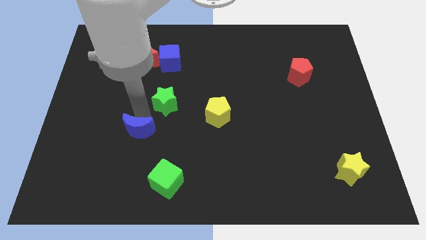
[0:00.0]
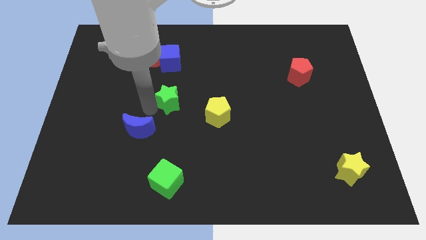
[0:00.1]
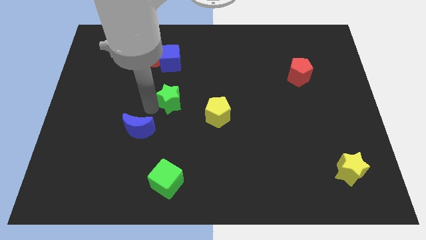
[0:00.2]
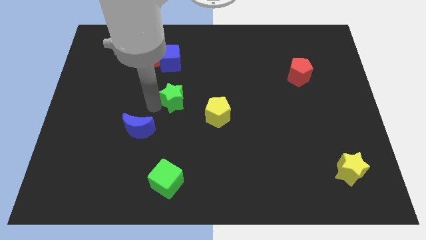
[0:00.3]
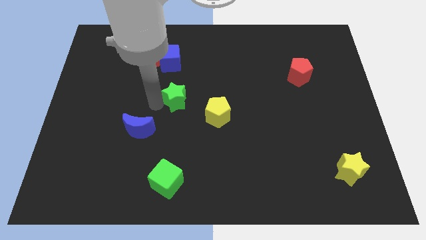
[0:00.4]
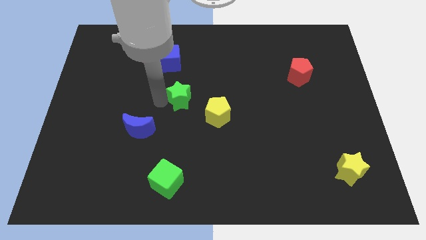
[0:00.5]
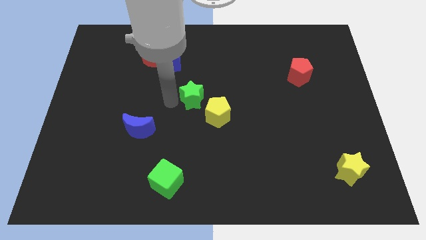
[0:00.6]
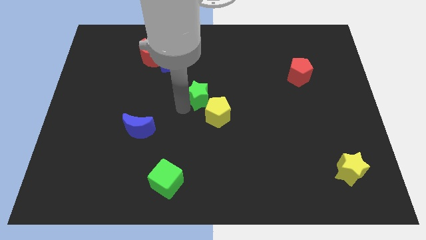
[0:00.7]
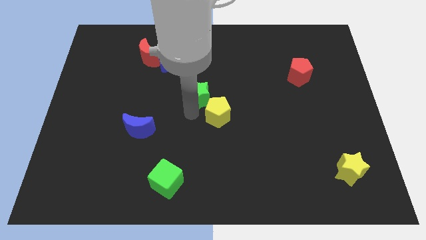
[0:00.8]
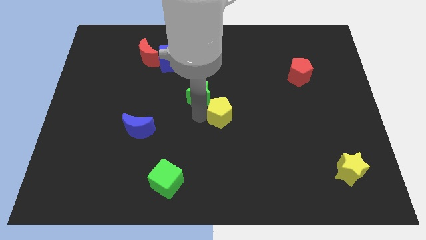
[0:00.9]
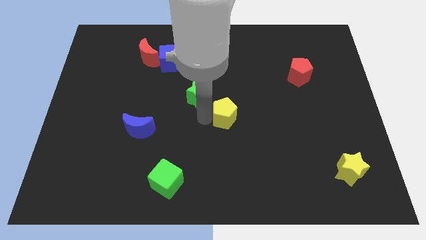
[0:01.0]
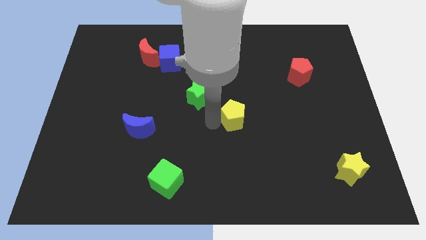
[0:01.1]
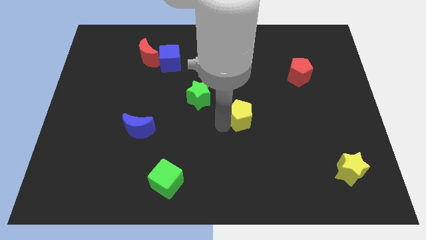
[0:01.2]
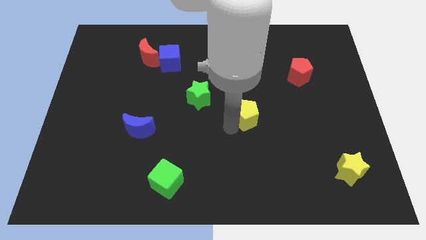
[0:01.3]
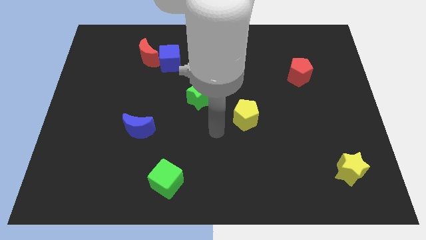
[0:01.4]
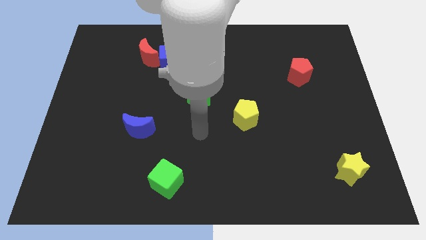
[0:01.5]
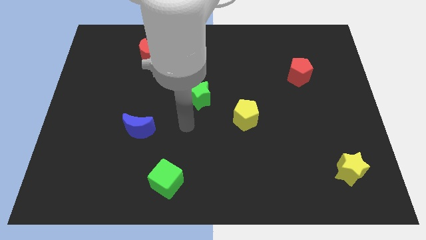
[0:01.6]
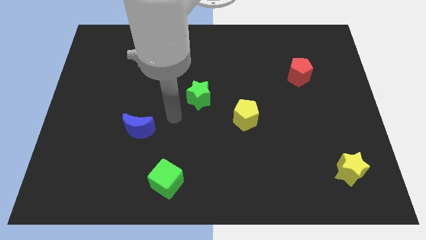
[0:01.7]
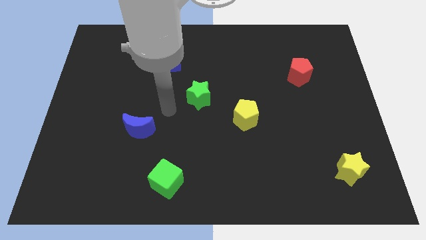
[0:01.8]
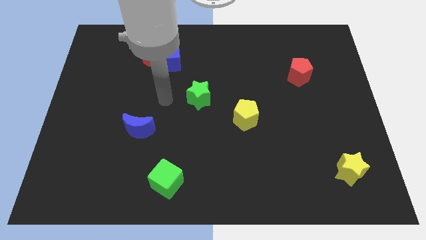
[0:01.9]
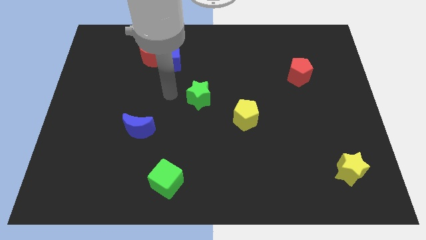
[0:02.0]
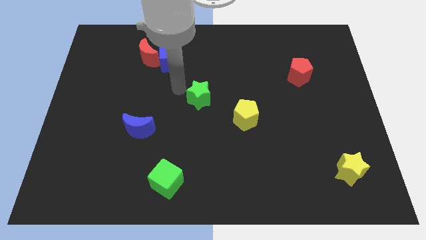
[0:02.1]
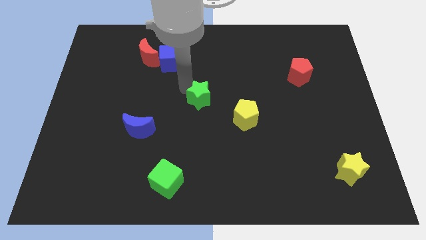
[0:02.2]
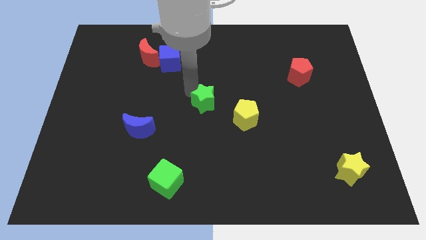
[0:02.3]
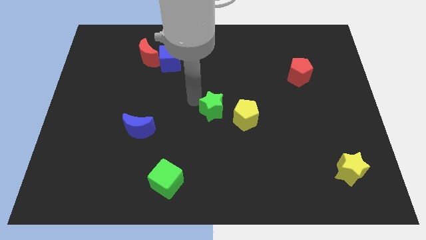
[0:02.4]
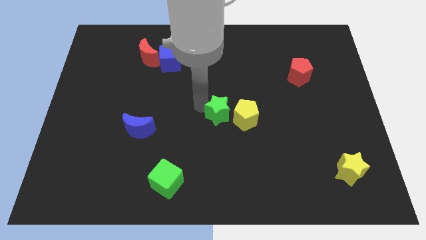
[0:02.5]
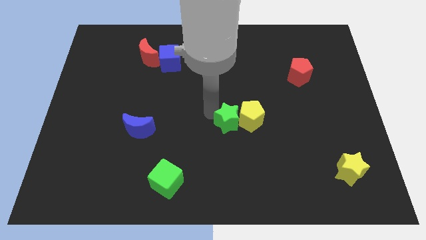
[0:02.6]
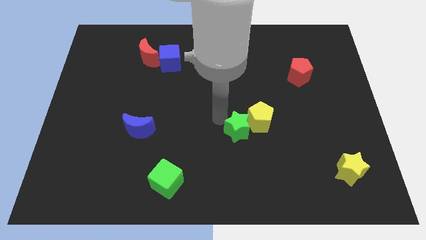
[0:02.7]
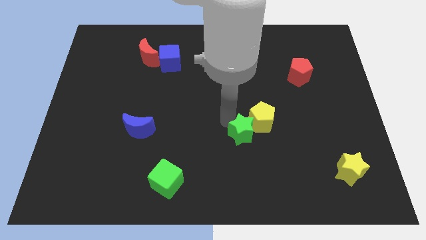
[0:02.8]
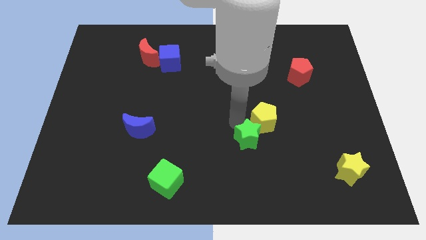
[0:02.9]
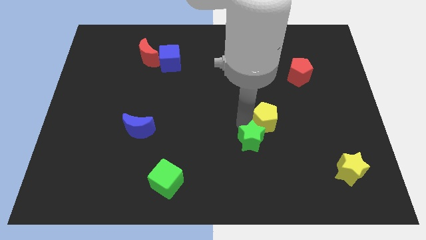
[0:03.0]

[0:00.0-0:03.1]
slide the green star to the bottom left of the yellow pentagon

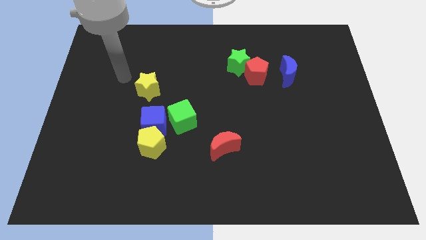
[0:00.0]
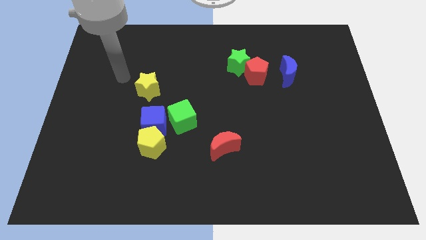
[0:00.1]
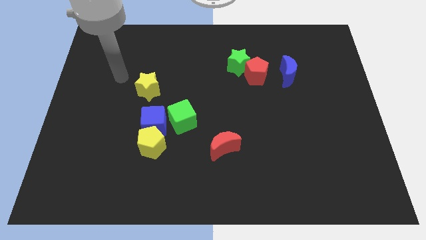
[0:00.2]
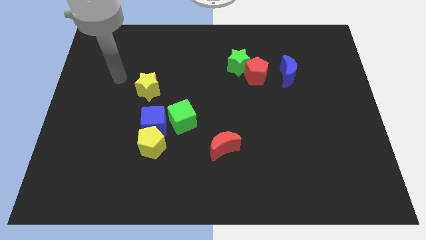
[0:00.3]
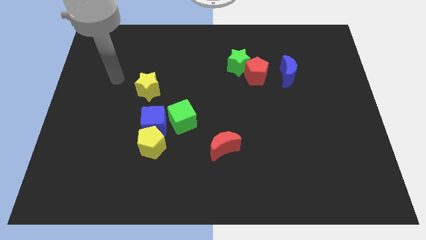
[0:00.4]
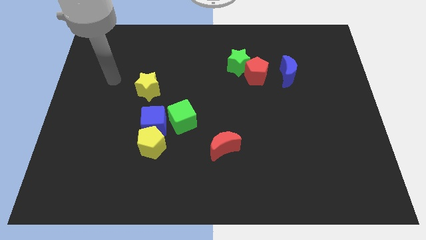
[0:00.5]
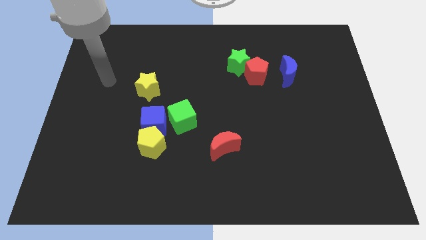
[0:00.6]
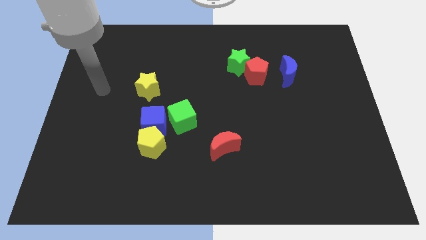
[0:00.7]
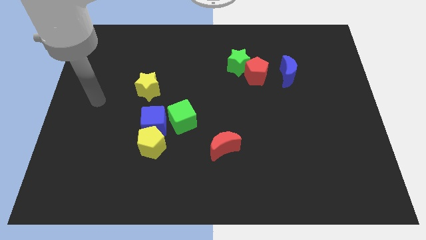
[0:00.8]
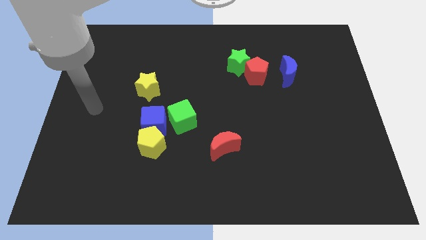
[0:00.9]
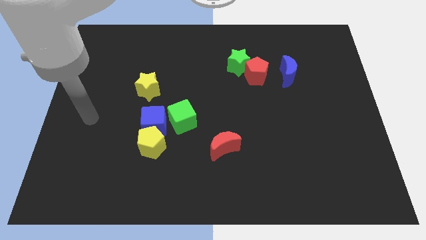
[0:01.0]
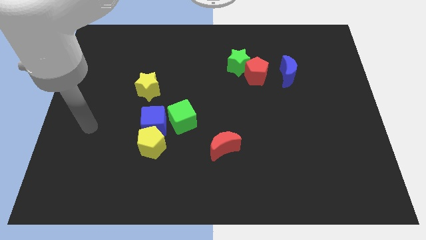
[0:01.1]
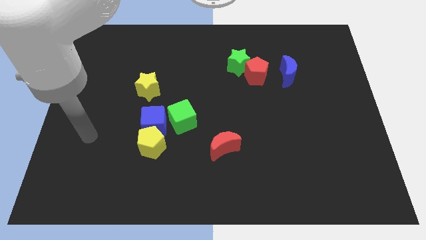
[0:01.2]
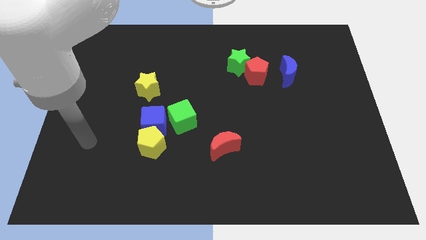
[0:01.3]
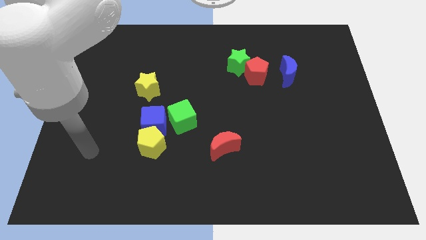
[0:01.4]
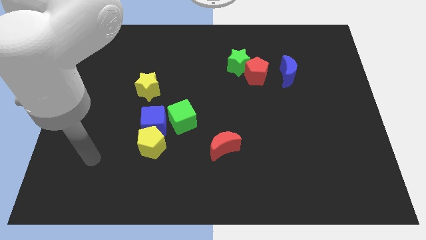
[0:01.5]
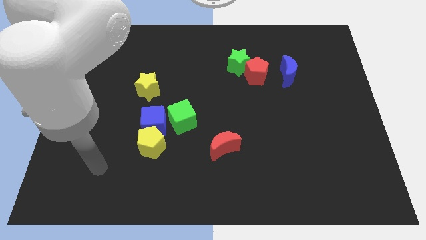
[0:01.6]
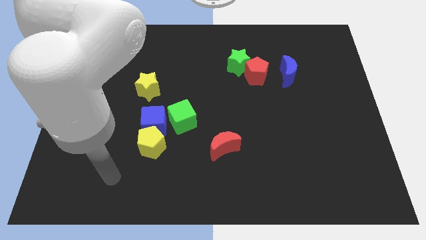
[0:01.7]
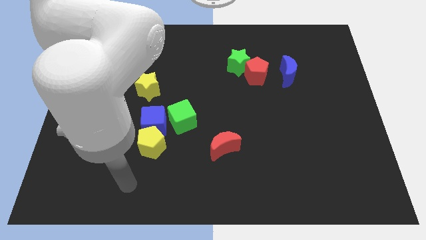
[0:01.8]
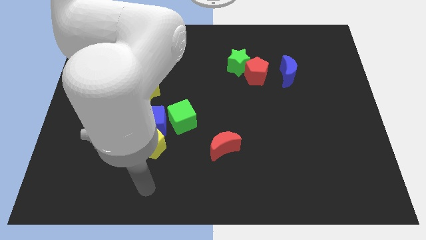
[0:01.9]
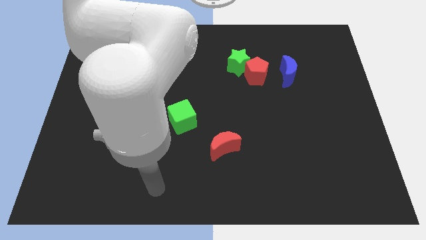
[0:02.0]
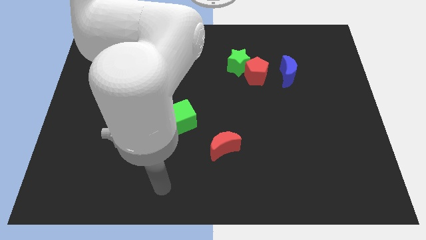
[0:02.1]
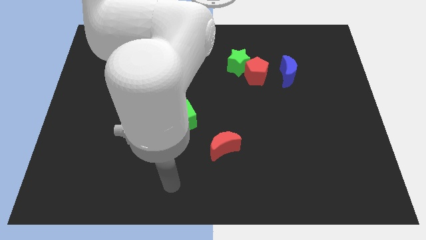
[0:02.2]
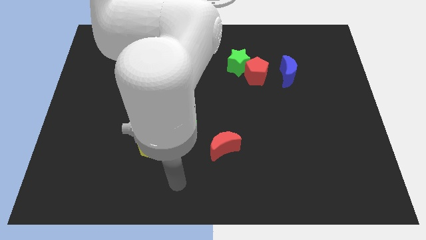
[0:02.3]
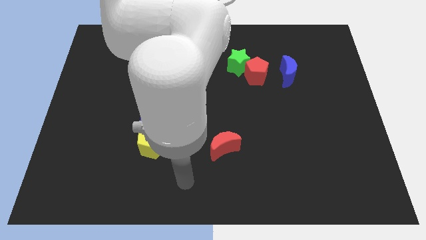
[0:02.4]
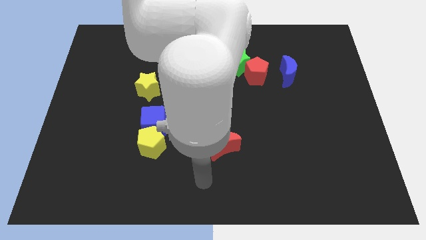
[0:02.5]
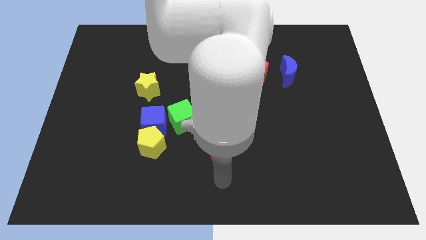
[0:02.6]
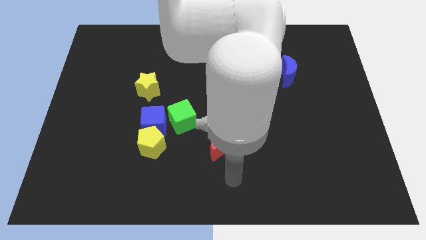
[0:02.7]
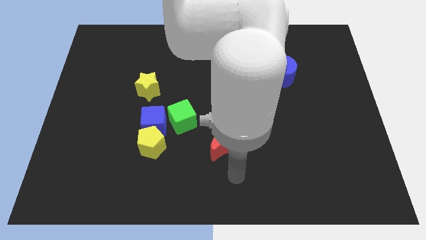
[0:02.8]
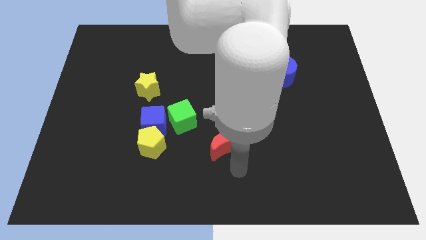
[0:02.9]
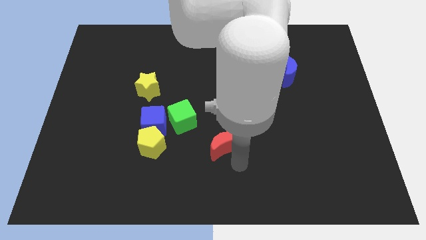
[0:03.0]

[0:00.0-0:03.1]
move your arm below the red moon

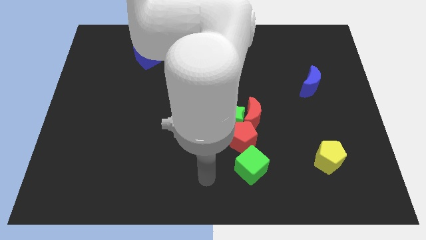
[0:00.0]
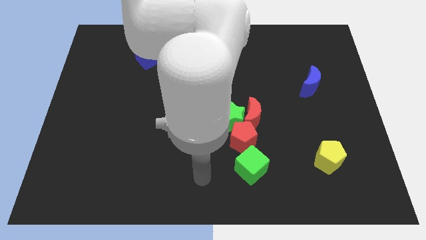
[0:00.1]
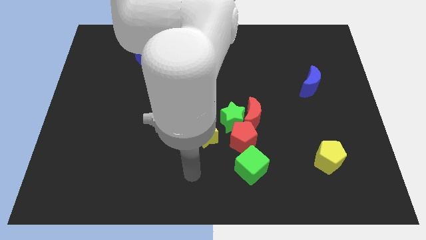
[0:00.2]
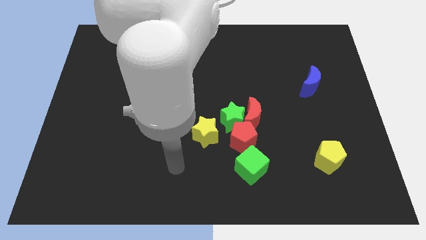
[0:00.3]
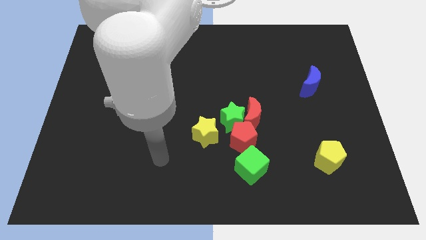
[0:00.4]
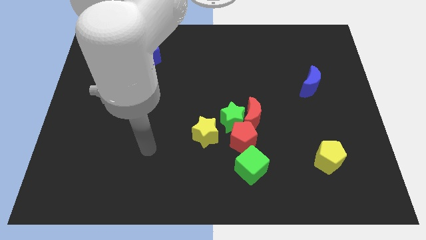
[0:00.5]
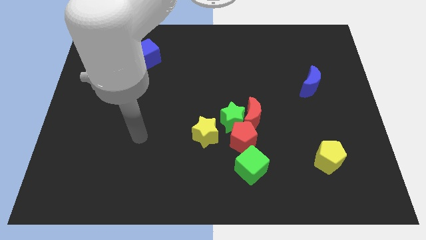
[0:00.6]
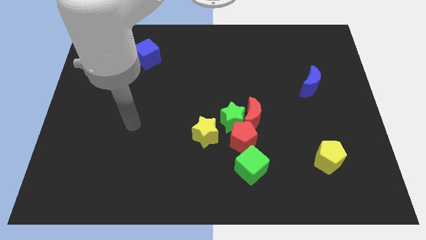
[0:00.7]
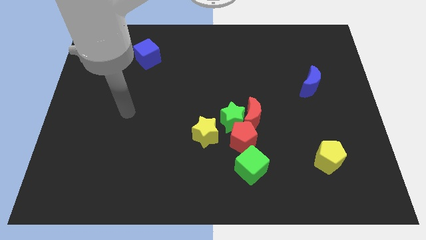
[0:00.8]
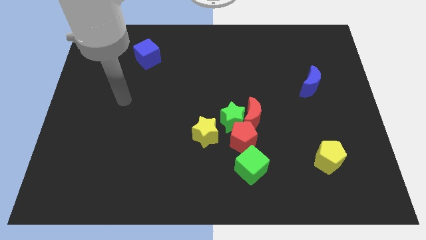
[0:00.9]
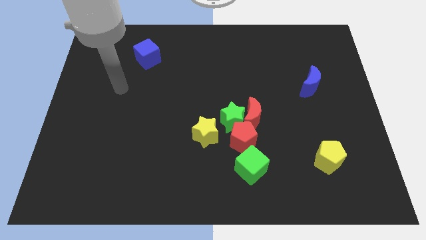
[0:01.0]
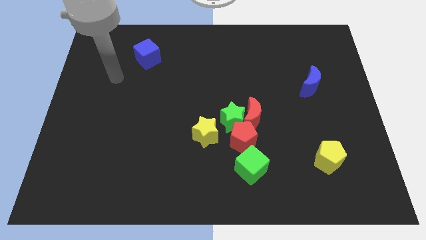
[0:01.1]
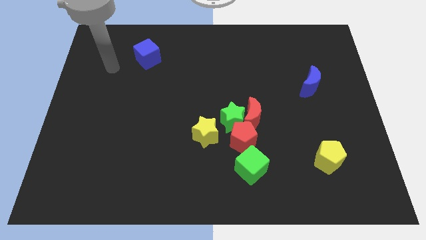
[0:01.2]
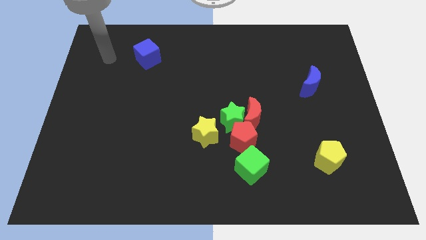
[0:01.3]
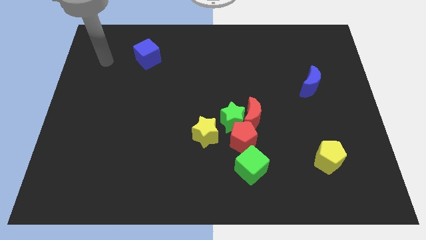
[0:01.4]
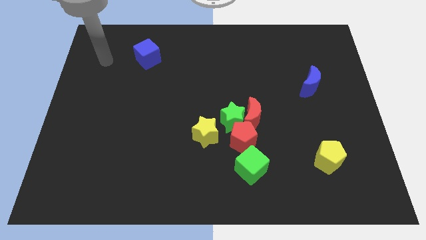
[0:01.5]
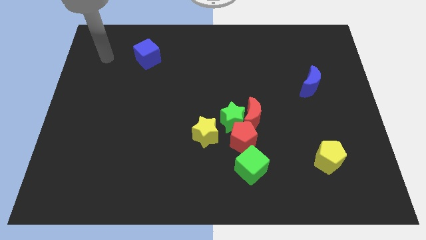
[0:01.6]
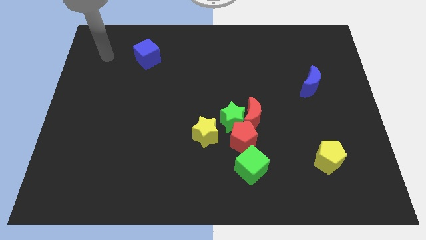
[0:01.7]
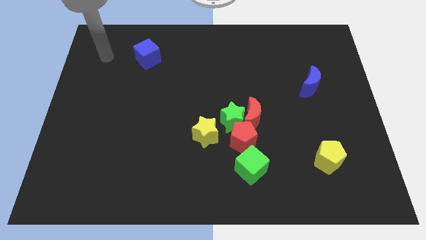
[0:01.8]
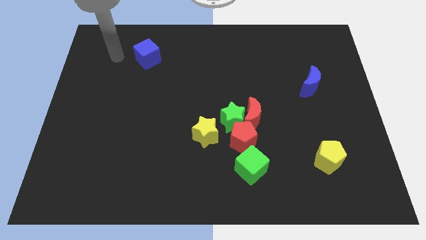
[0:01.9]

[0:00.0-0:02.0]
move your arm to the top left of the board

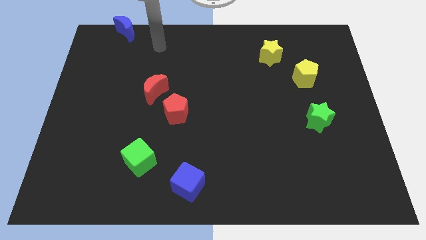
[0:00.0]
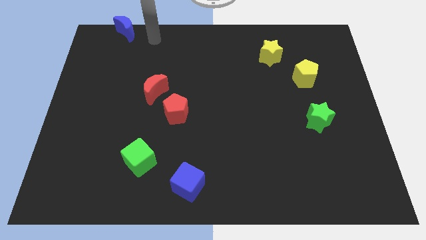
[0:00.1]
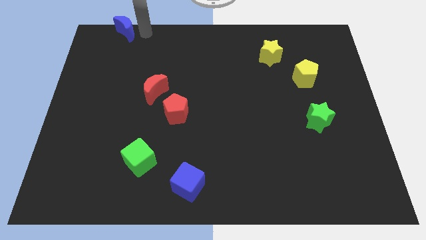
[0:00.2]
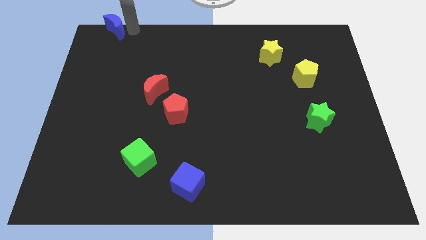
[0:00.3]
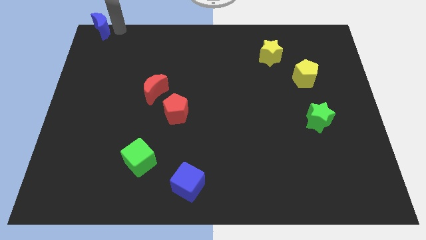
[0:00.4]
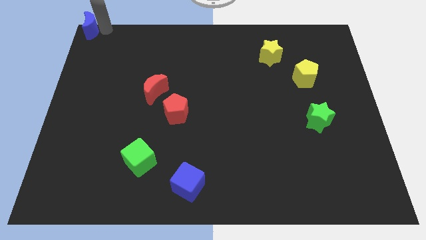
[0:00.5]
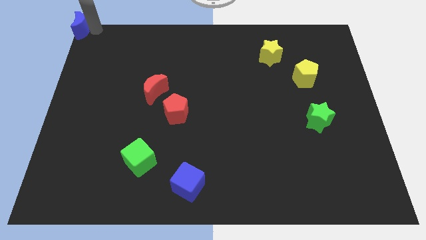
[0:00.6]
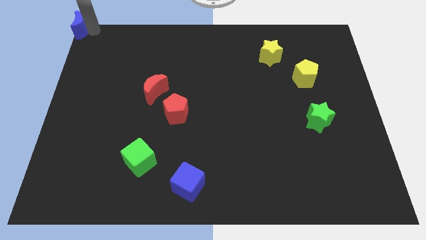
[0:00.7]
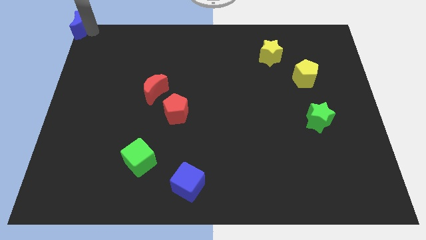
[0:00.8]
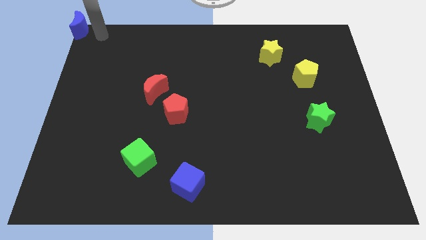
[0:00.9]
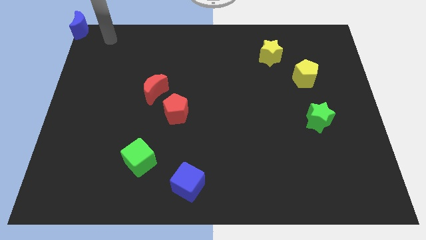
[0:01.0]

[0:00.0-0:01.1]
place the blue crescent at the top left corner of the board
